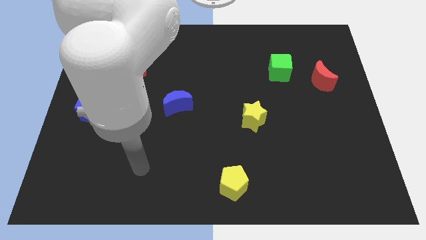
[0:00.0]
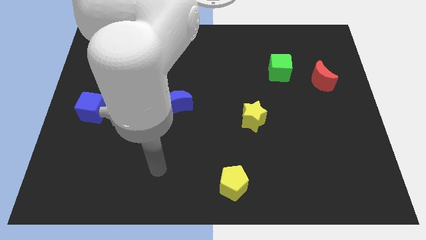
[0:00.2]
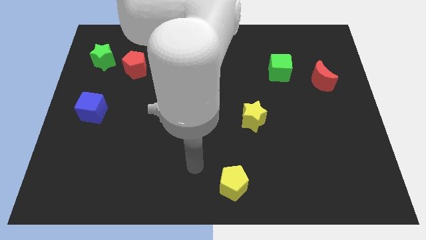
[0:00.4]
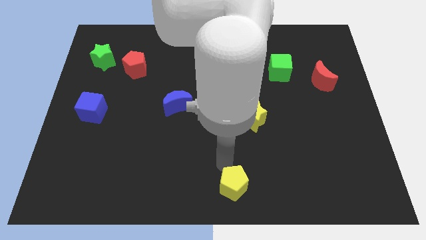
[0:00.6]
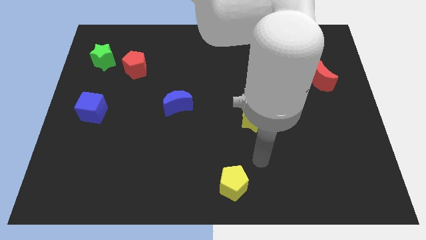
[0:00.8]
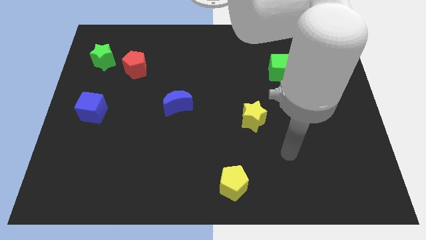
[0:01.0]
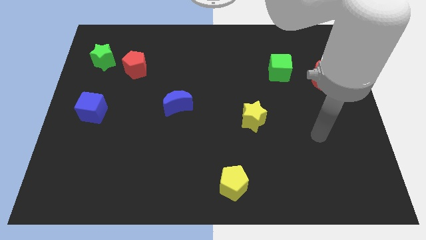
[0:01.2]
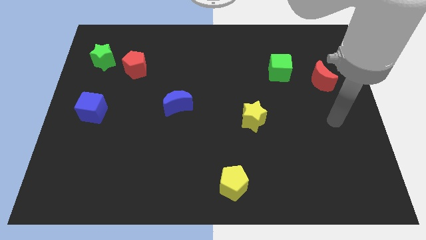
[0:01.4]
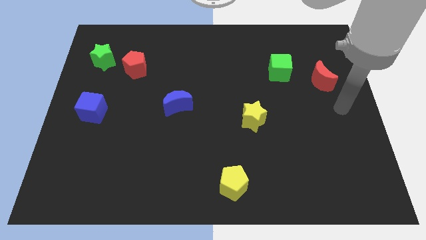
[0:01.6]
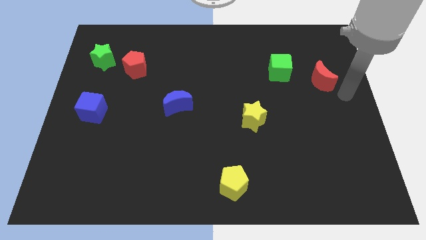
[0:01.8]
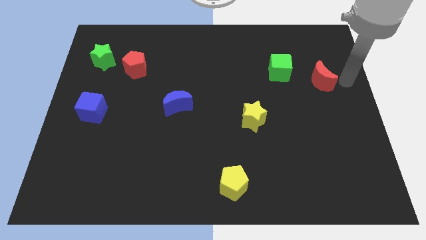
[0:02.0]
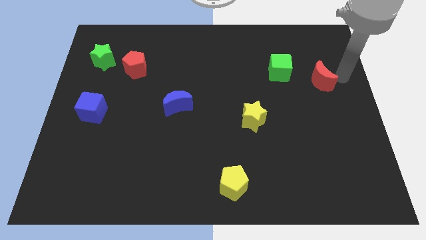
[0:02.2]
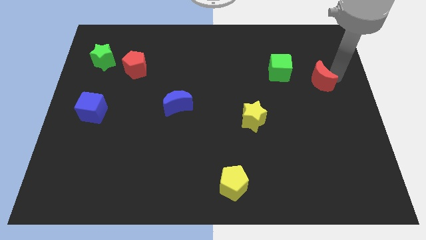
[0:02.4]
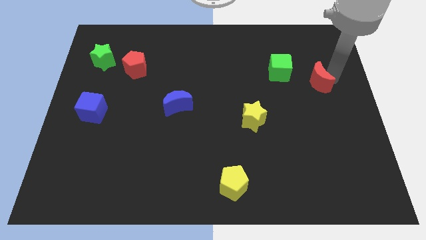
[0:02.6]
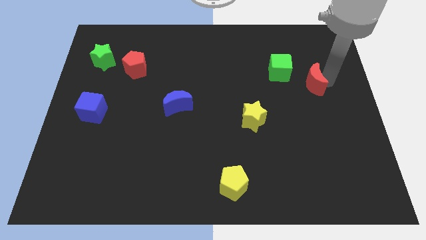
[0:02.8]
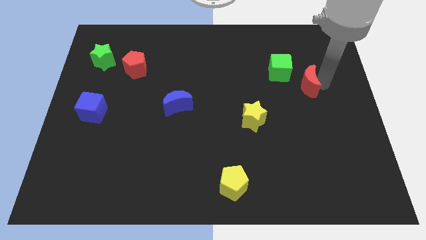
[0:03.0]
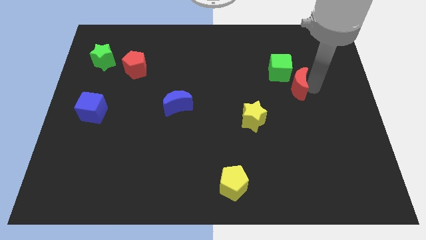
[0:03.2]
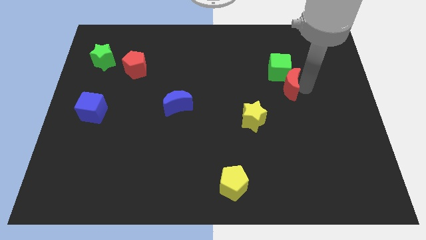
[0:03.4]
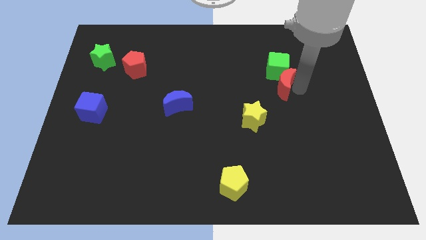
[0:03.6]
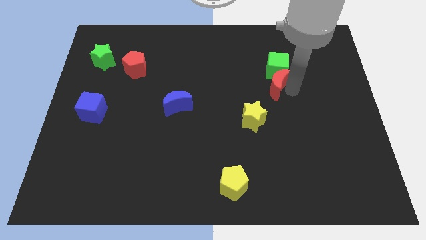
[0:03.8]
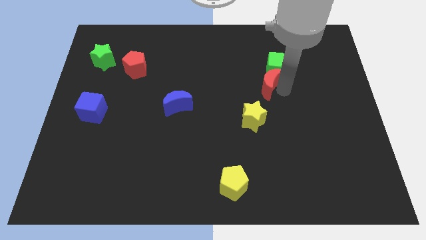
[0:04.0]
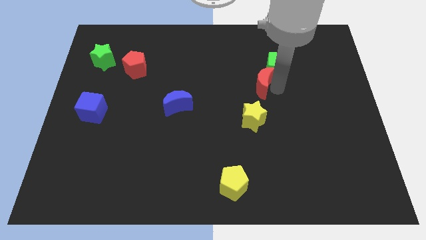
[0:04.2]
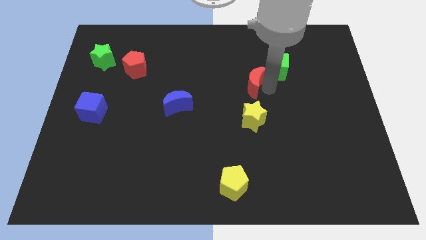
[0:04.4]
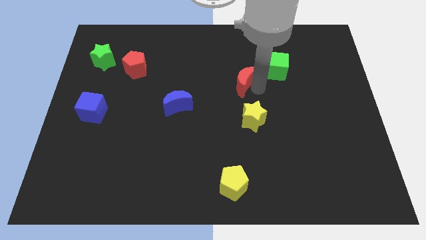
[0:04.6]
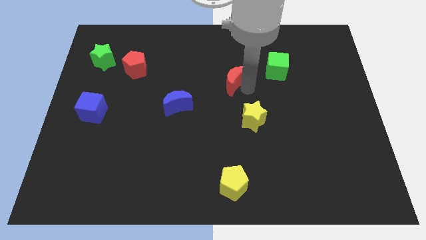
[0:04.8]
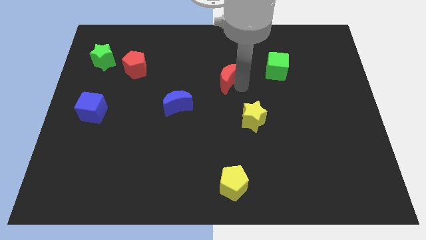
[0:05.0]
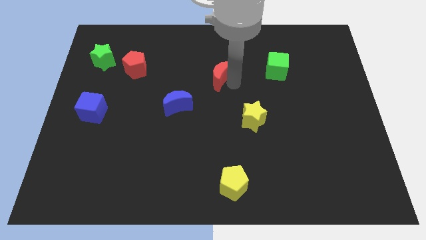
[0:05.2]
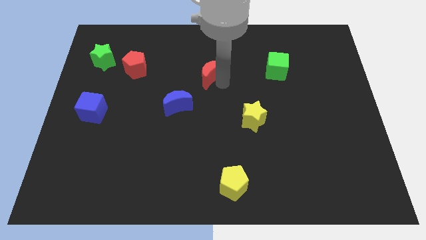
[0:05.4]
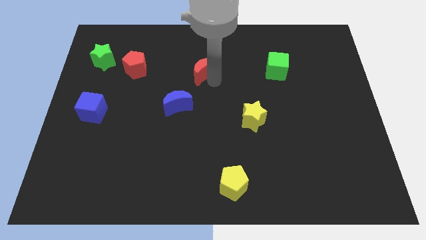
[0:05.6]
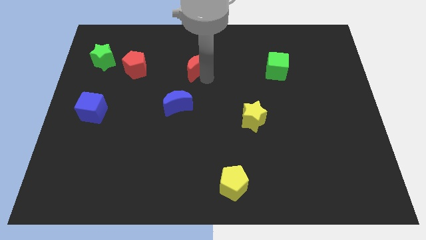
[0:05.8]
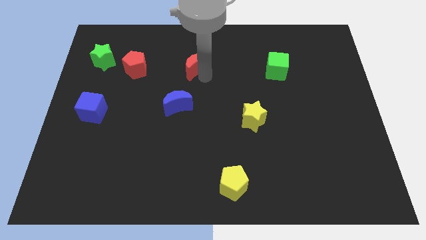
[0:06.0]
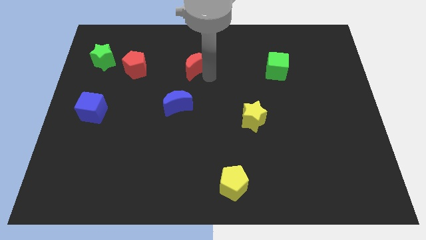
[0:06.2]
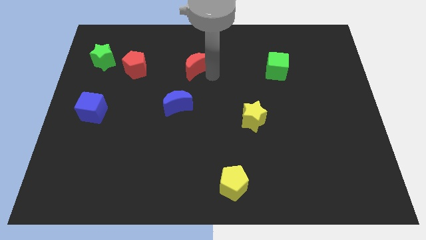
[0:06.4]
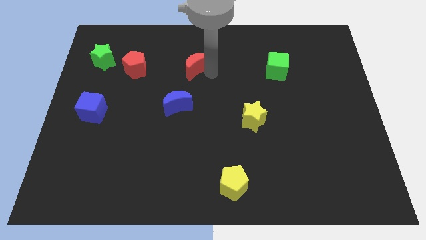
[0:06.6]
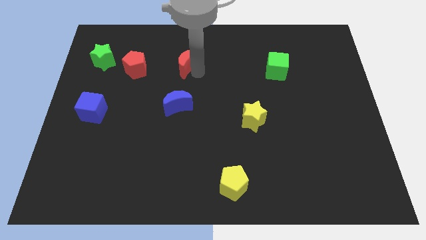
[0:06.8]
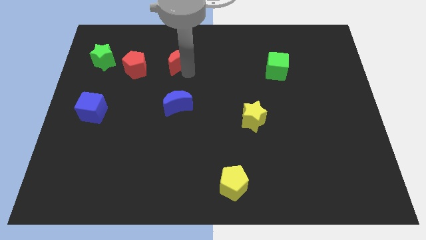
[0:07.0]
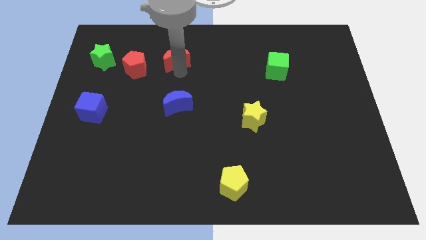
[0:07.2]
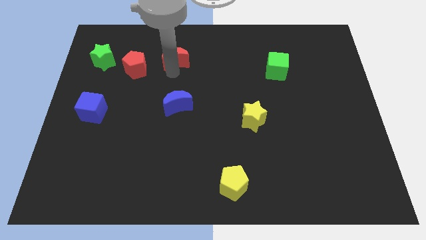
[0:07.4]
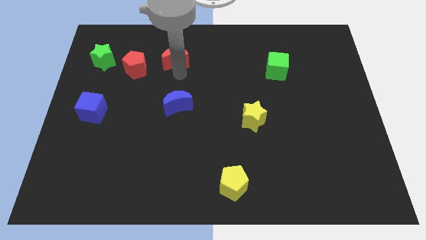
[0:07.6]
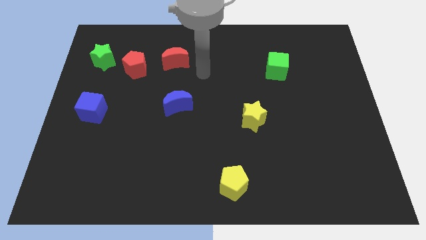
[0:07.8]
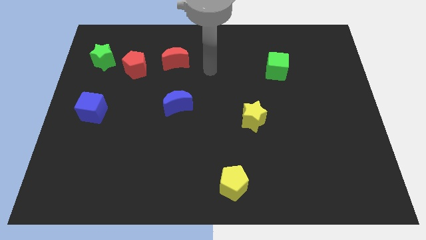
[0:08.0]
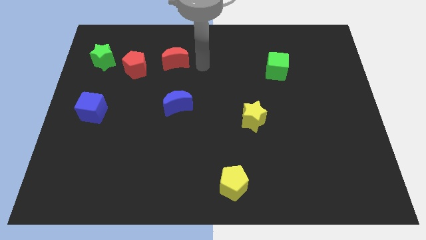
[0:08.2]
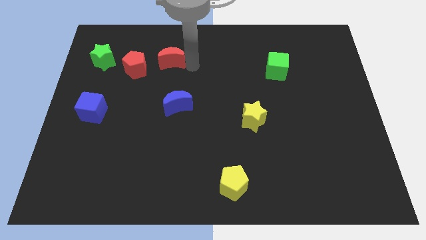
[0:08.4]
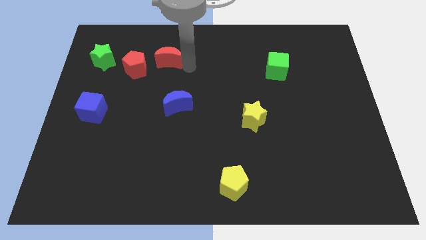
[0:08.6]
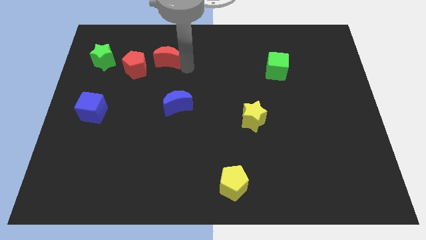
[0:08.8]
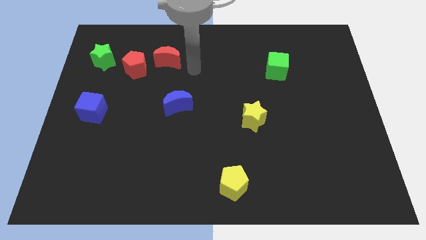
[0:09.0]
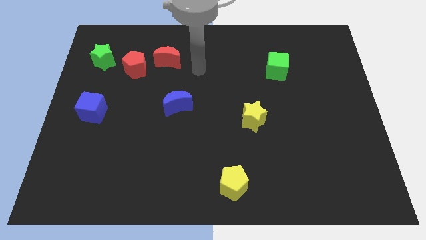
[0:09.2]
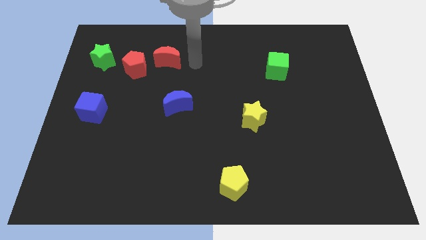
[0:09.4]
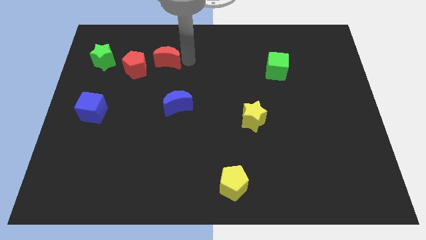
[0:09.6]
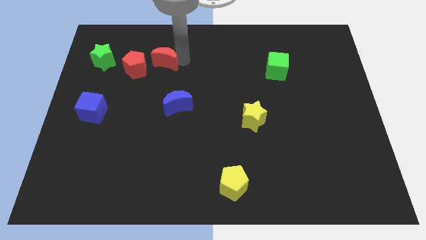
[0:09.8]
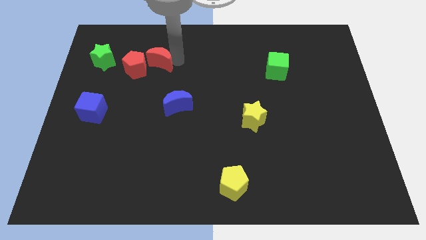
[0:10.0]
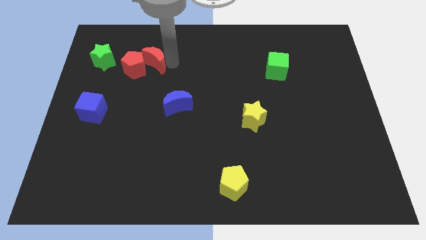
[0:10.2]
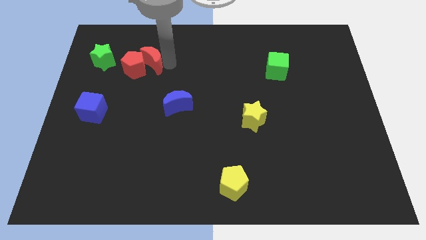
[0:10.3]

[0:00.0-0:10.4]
push the red moon close to the red pentagon

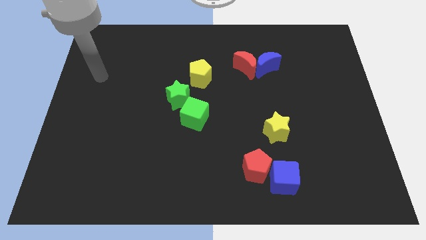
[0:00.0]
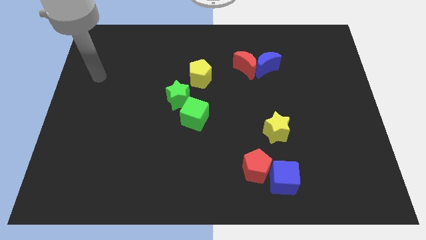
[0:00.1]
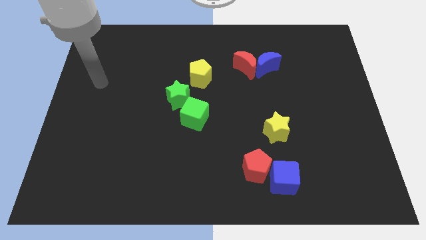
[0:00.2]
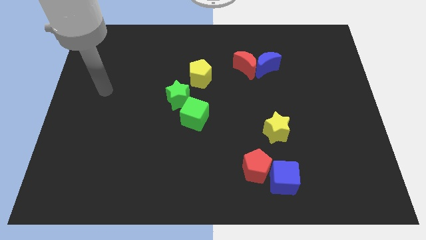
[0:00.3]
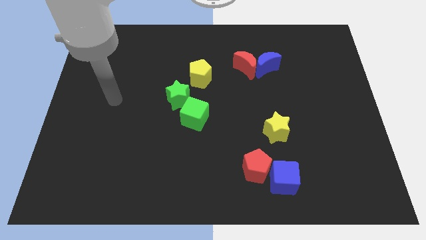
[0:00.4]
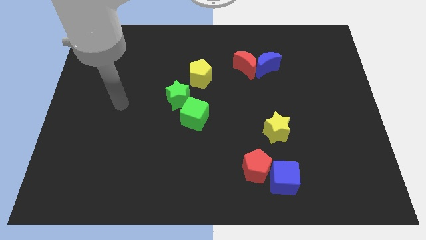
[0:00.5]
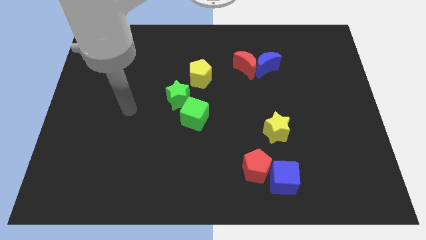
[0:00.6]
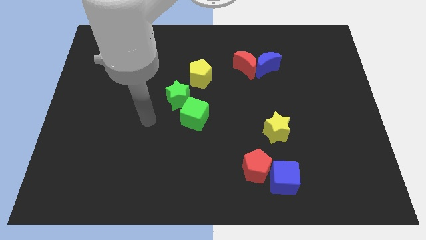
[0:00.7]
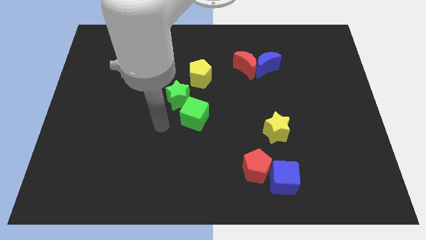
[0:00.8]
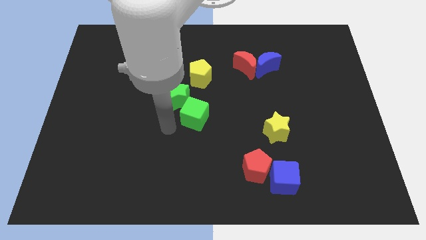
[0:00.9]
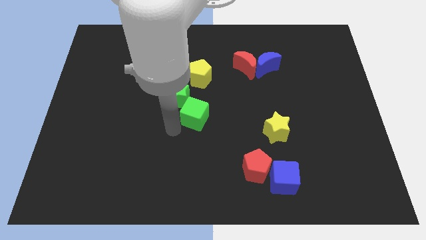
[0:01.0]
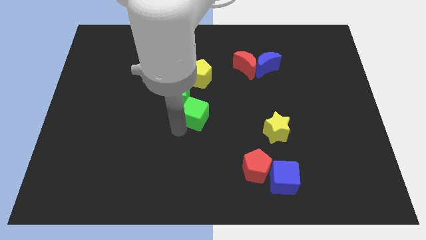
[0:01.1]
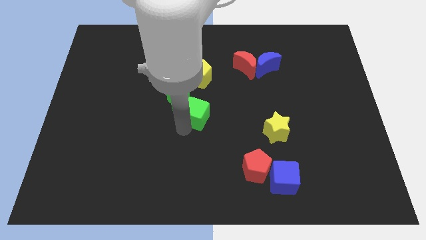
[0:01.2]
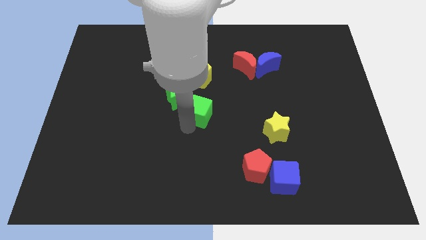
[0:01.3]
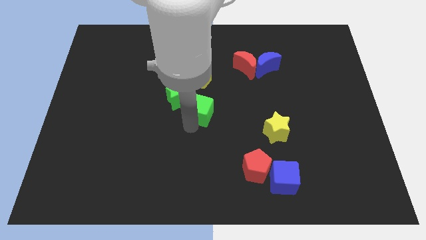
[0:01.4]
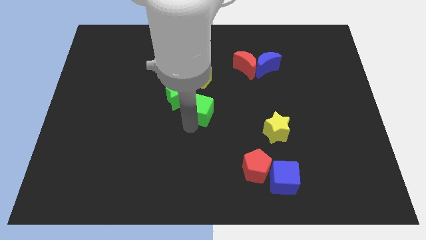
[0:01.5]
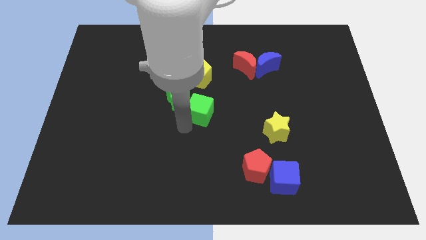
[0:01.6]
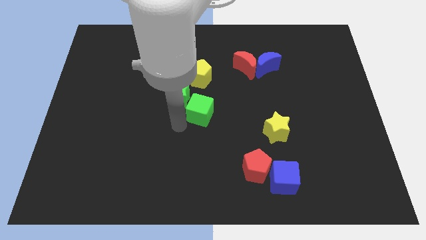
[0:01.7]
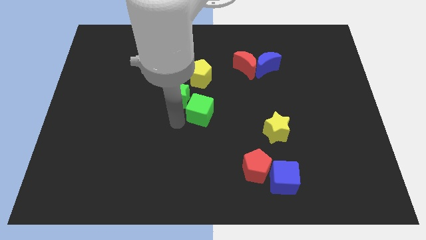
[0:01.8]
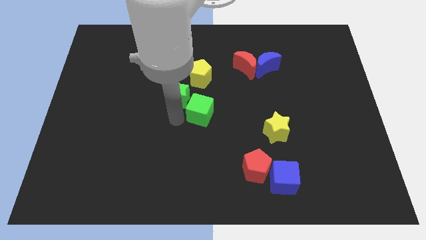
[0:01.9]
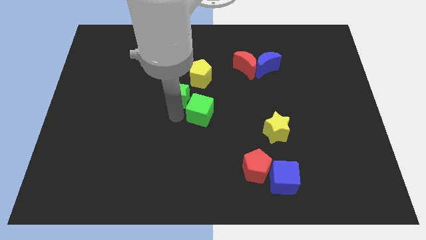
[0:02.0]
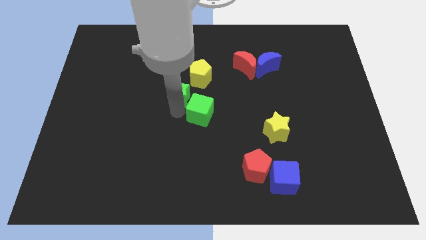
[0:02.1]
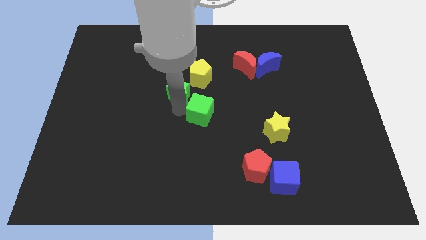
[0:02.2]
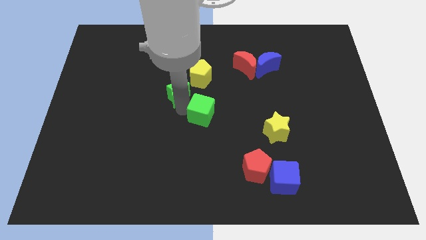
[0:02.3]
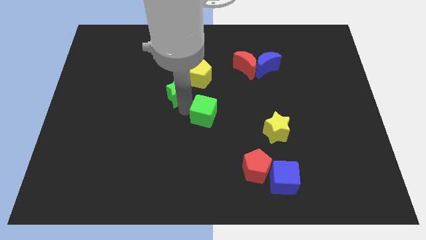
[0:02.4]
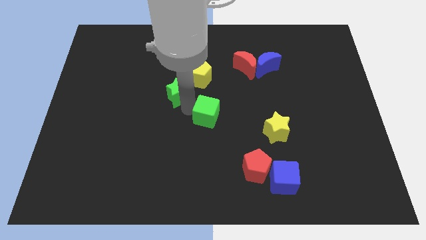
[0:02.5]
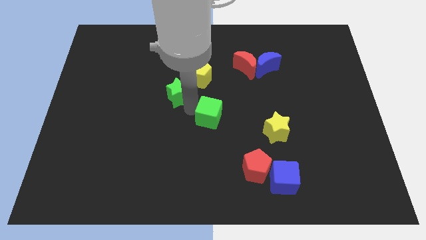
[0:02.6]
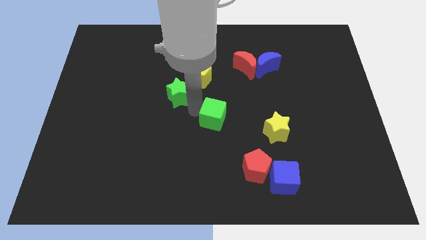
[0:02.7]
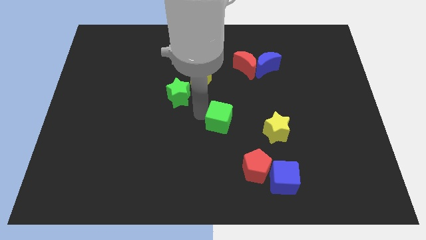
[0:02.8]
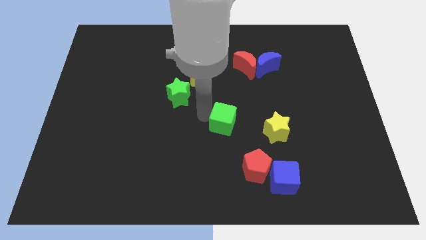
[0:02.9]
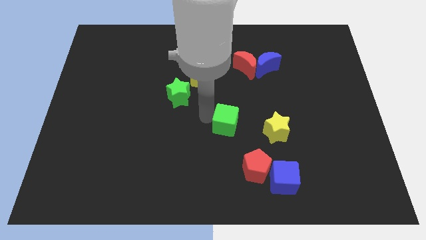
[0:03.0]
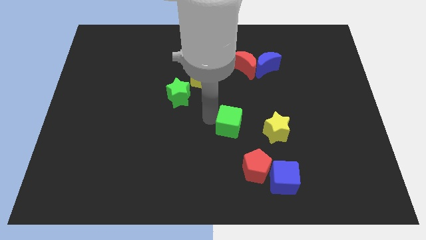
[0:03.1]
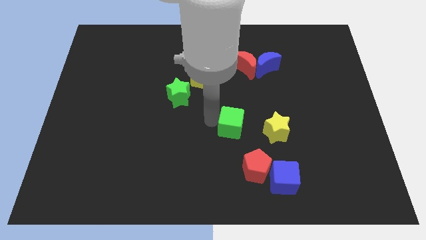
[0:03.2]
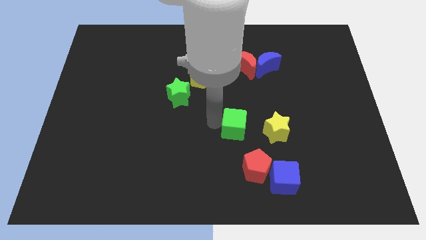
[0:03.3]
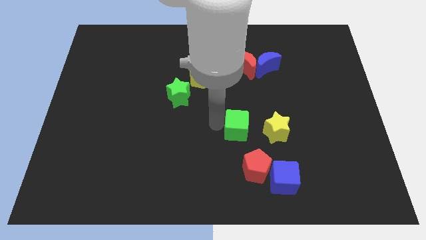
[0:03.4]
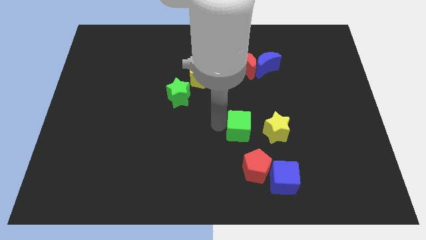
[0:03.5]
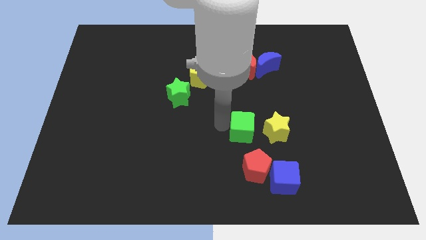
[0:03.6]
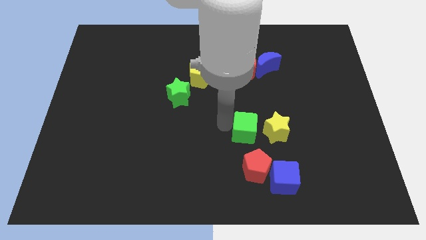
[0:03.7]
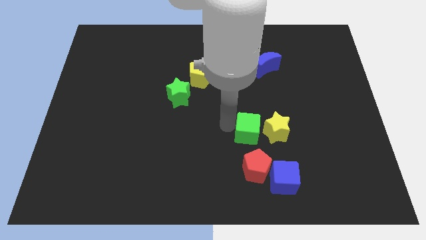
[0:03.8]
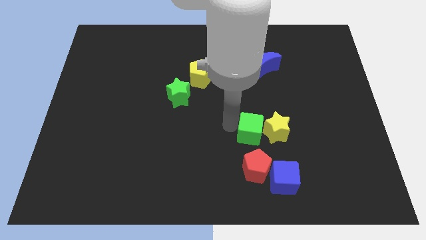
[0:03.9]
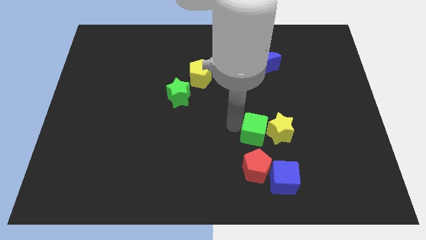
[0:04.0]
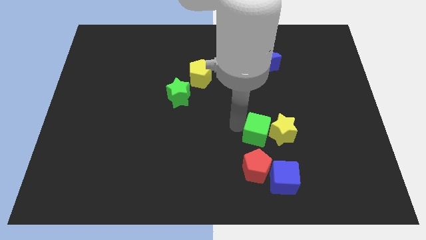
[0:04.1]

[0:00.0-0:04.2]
slide the green cube next to the yellow star
